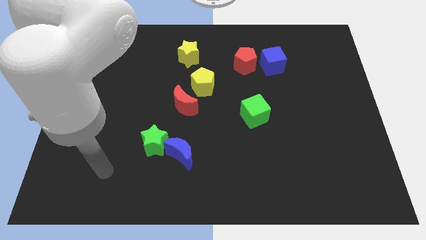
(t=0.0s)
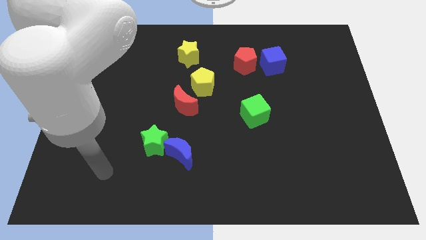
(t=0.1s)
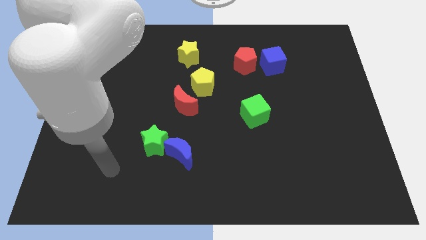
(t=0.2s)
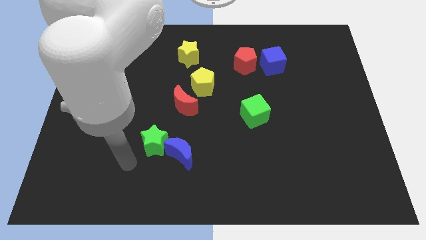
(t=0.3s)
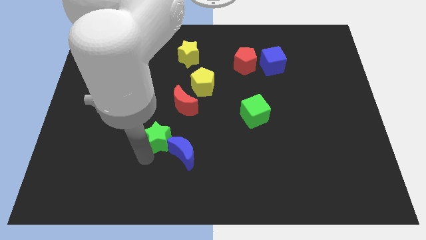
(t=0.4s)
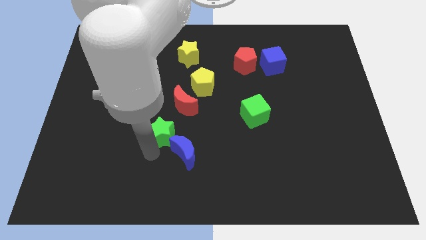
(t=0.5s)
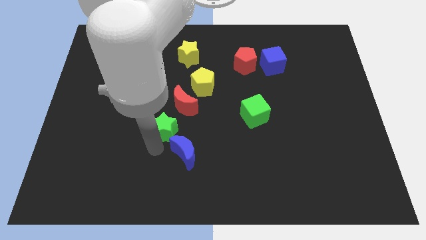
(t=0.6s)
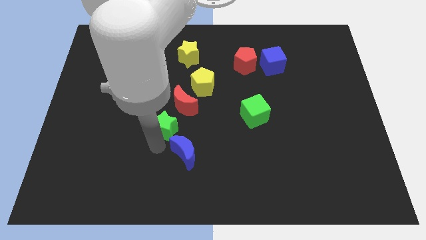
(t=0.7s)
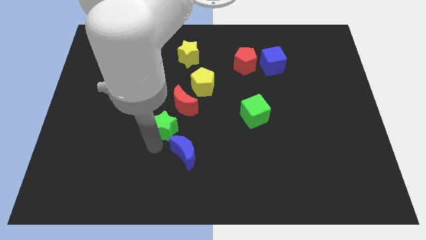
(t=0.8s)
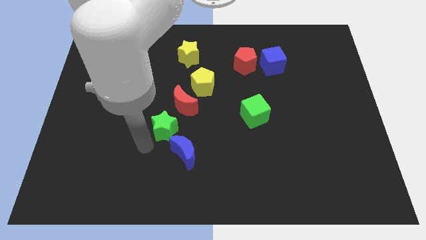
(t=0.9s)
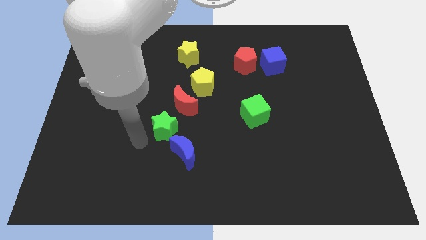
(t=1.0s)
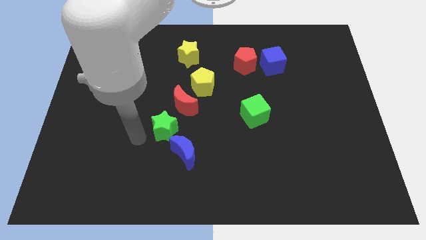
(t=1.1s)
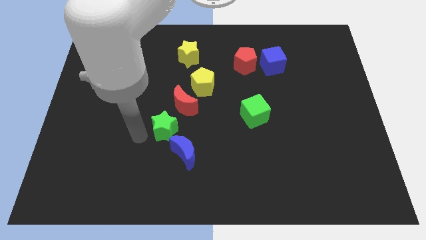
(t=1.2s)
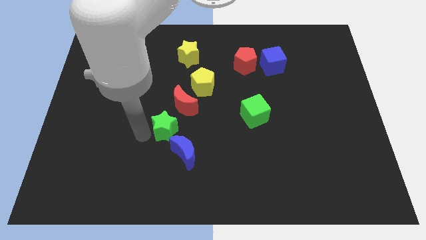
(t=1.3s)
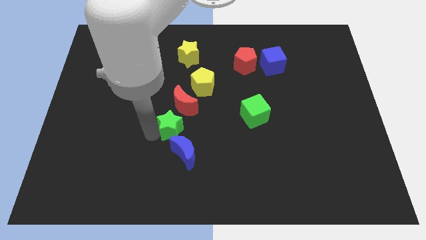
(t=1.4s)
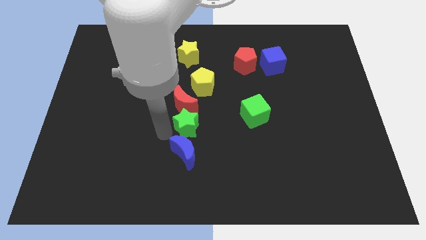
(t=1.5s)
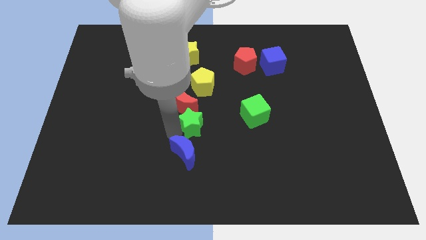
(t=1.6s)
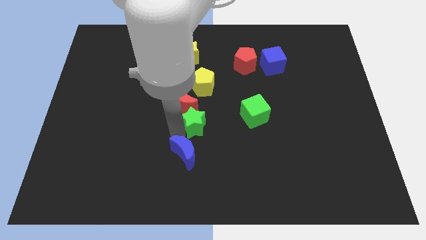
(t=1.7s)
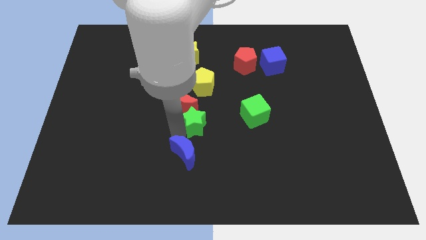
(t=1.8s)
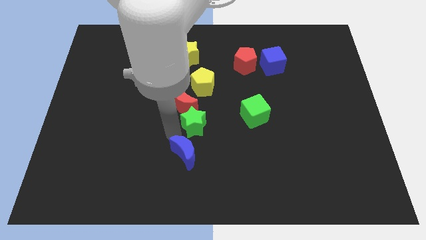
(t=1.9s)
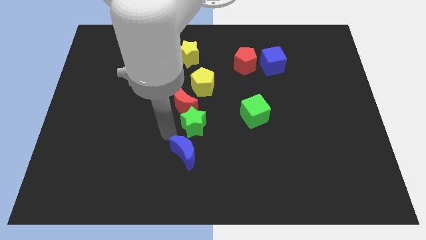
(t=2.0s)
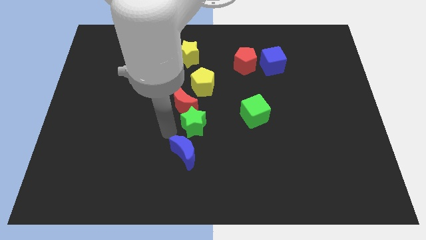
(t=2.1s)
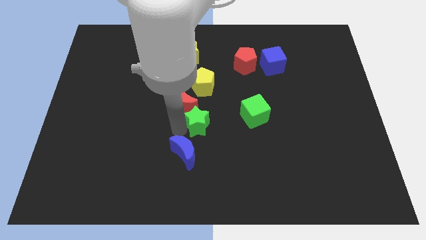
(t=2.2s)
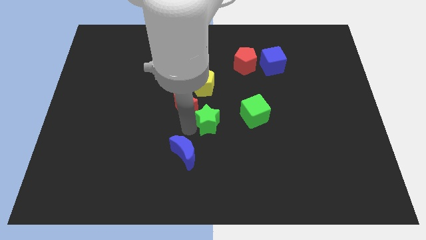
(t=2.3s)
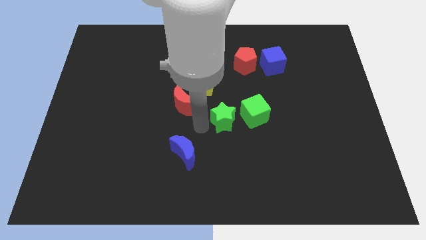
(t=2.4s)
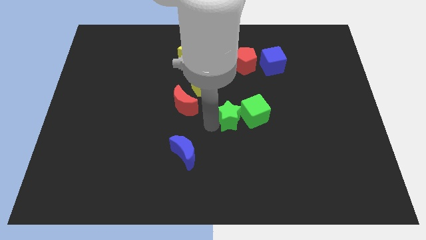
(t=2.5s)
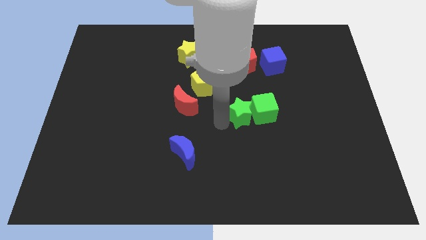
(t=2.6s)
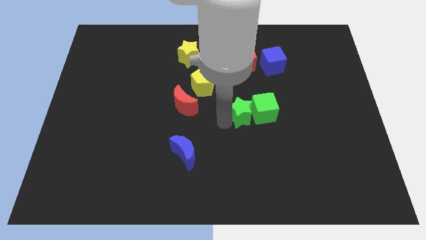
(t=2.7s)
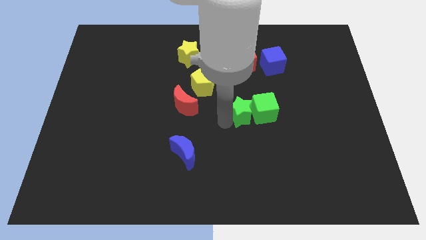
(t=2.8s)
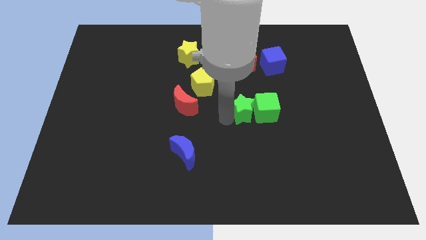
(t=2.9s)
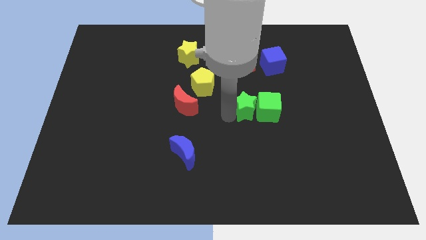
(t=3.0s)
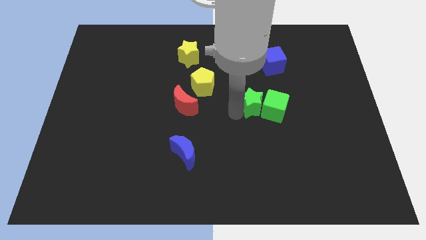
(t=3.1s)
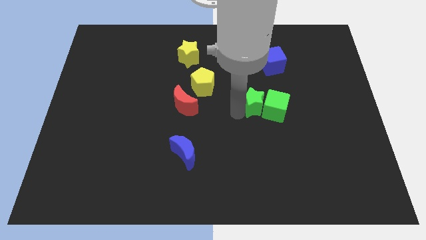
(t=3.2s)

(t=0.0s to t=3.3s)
move the green star into the green cube

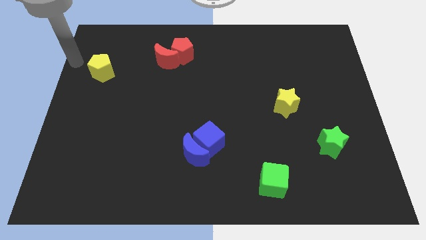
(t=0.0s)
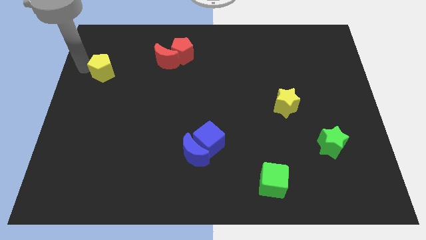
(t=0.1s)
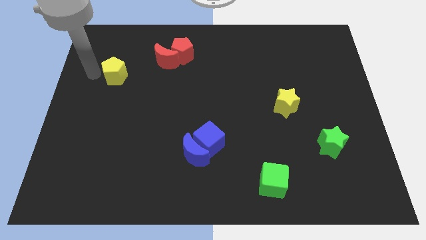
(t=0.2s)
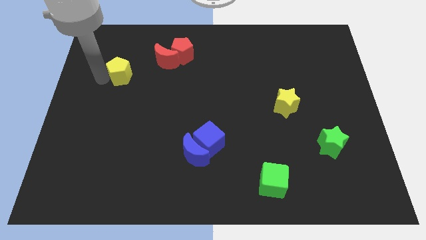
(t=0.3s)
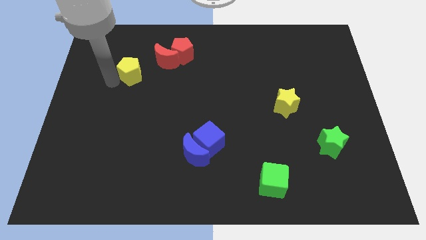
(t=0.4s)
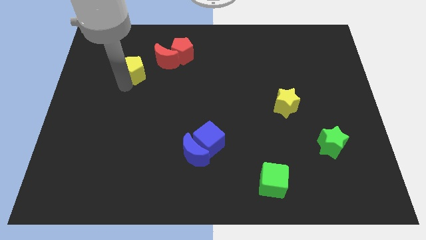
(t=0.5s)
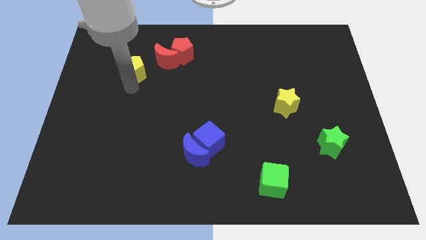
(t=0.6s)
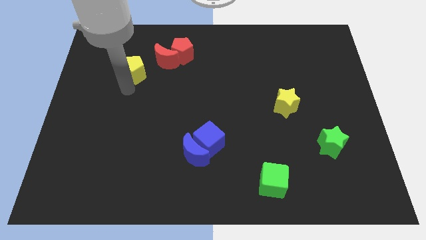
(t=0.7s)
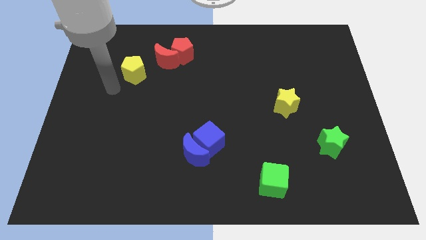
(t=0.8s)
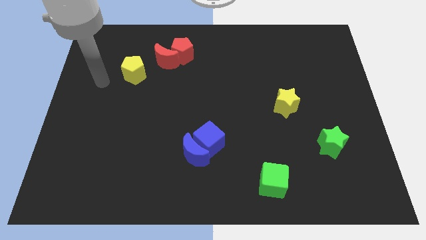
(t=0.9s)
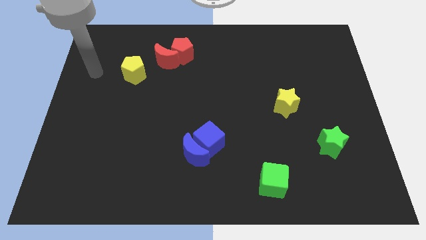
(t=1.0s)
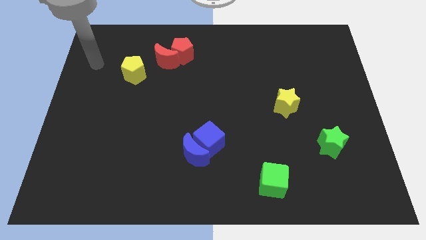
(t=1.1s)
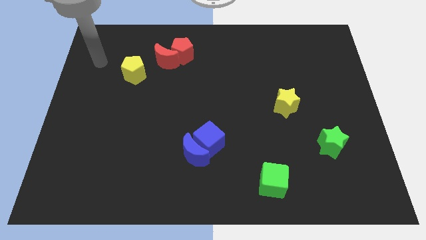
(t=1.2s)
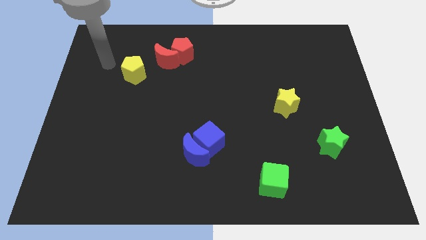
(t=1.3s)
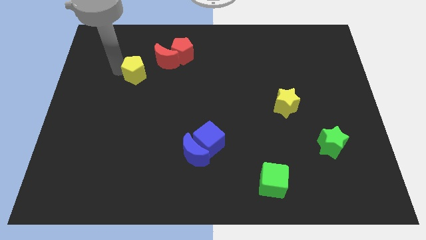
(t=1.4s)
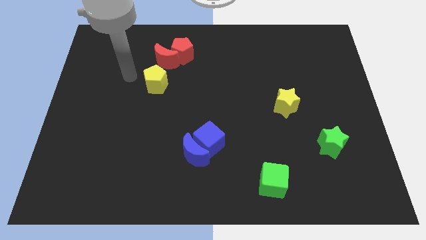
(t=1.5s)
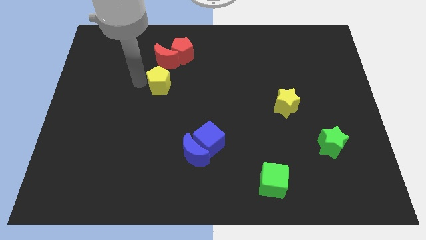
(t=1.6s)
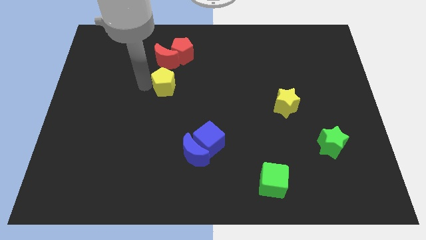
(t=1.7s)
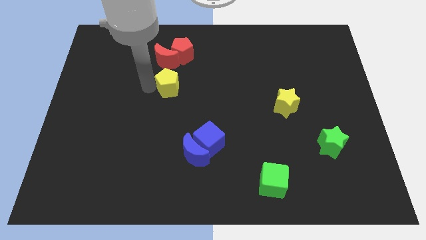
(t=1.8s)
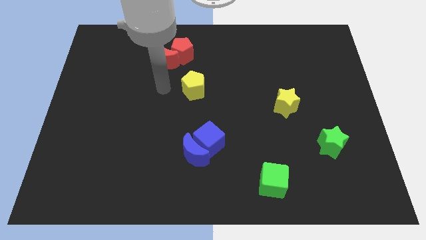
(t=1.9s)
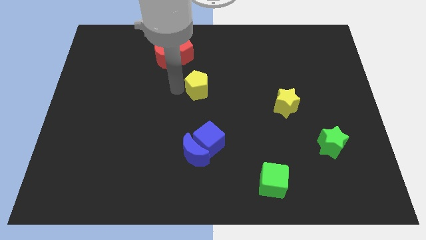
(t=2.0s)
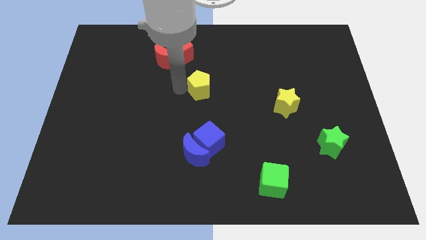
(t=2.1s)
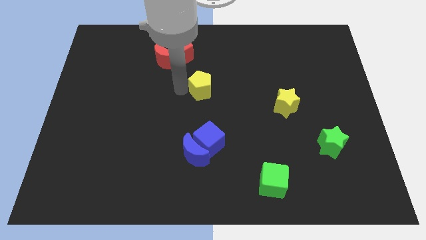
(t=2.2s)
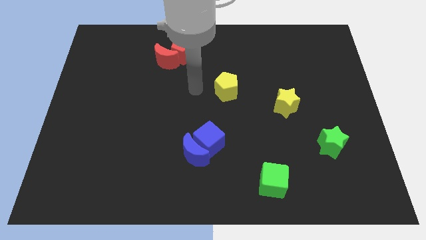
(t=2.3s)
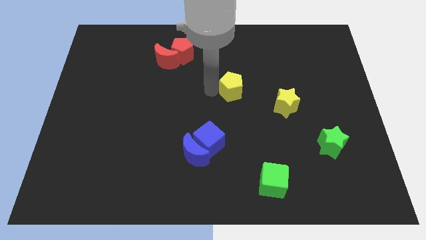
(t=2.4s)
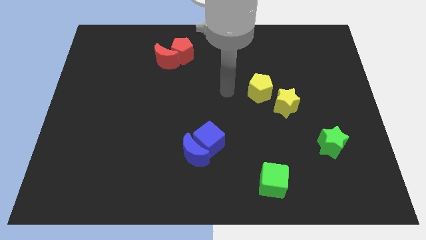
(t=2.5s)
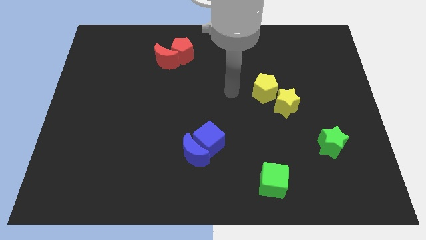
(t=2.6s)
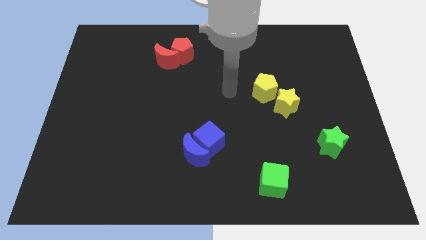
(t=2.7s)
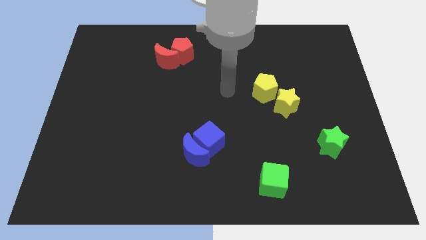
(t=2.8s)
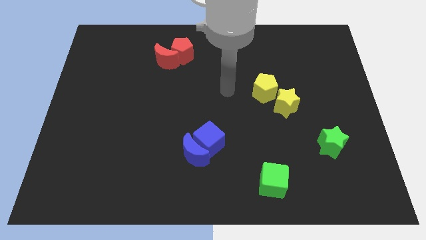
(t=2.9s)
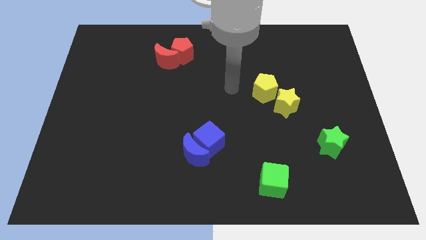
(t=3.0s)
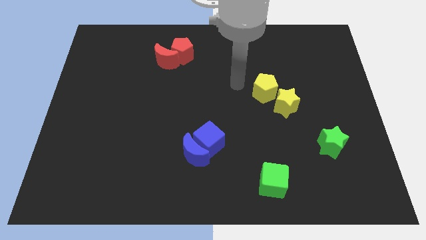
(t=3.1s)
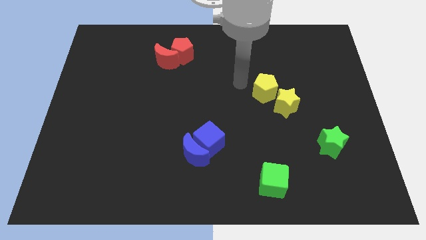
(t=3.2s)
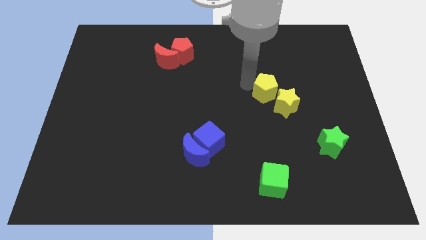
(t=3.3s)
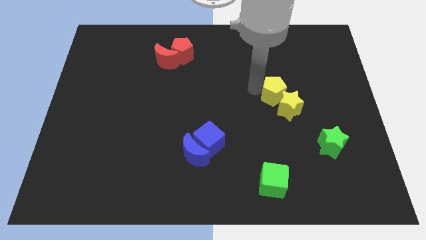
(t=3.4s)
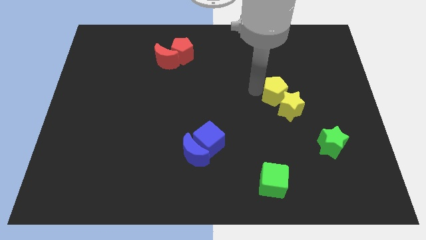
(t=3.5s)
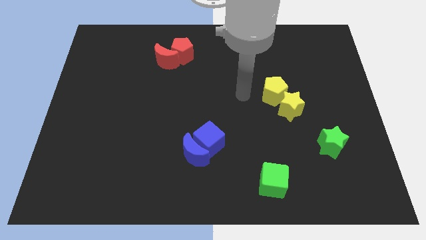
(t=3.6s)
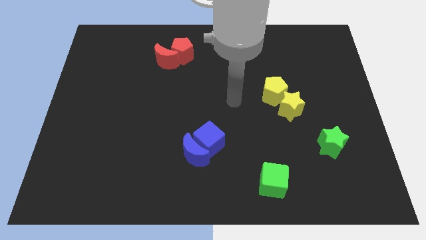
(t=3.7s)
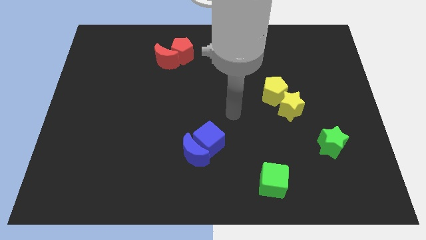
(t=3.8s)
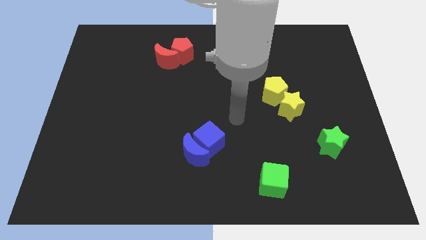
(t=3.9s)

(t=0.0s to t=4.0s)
move the yellow pentagon into the yellow star

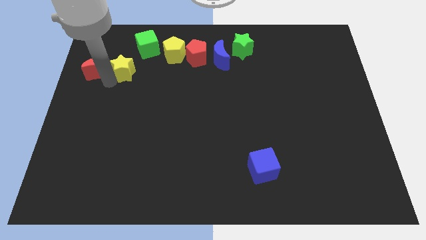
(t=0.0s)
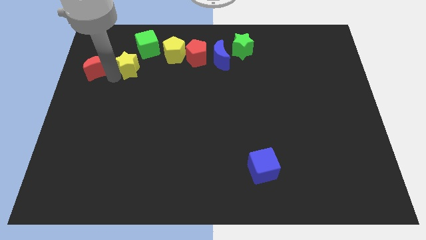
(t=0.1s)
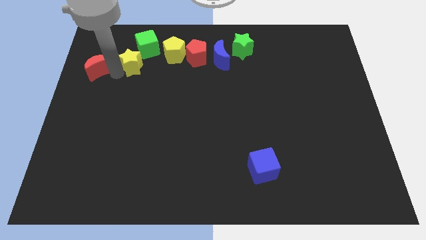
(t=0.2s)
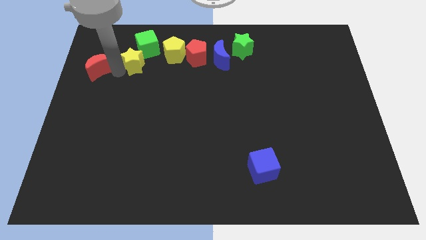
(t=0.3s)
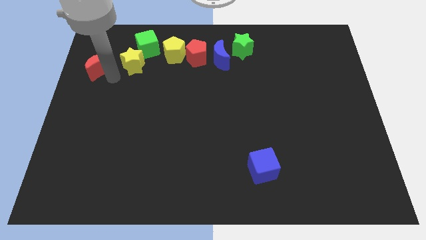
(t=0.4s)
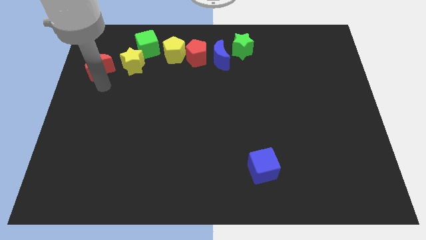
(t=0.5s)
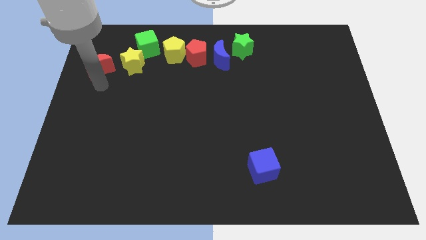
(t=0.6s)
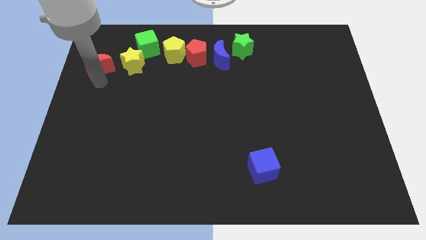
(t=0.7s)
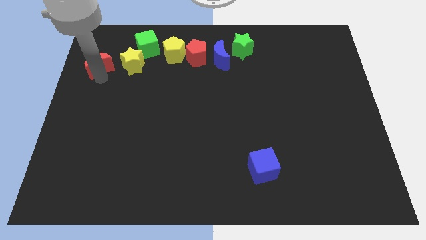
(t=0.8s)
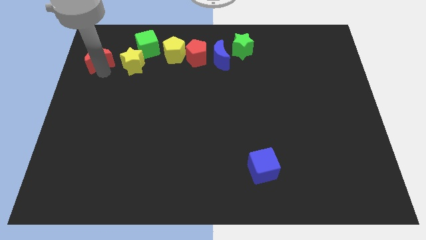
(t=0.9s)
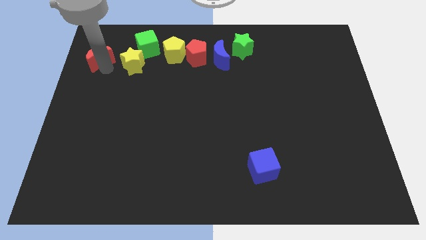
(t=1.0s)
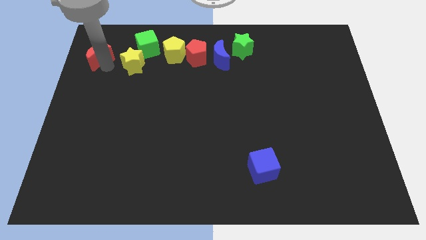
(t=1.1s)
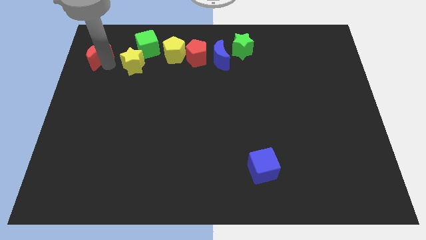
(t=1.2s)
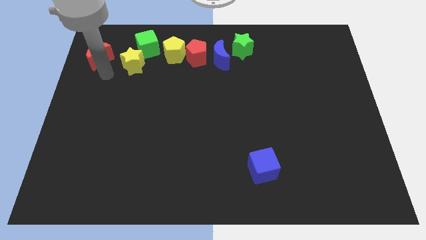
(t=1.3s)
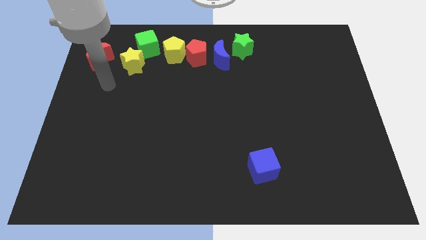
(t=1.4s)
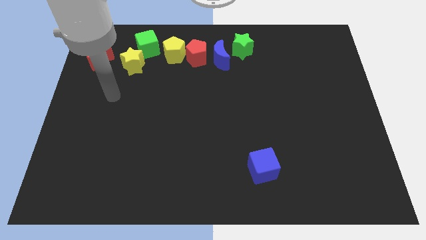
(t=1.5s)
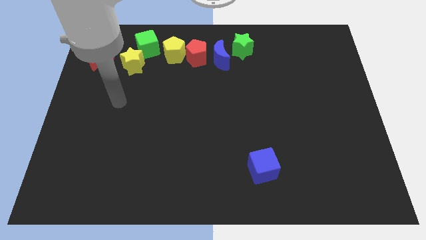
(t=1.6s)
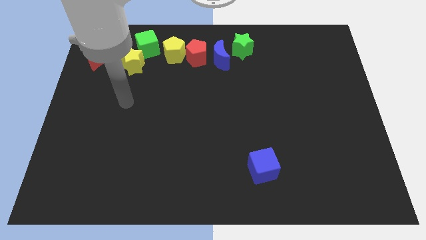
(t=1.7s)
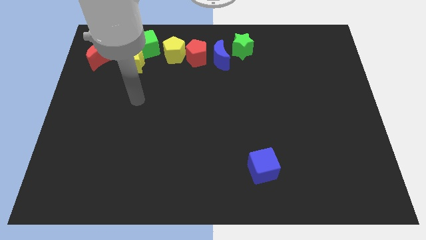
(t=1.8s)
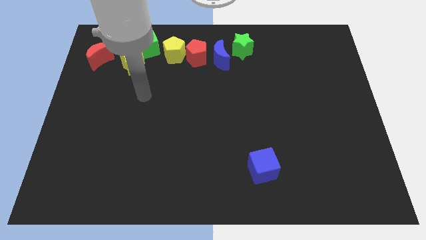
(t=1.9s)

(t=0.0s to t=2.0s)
separate the red moon from yellow star
